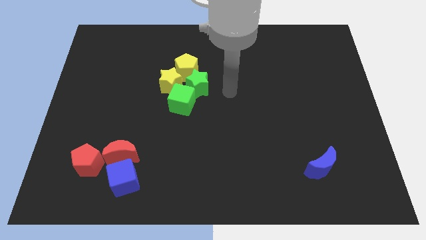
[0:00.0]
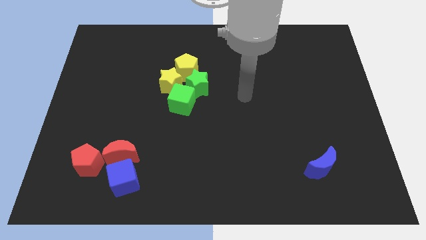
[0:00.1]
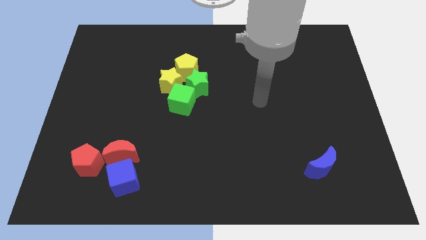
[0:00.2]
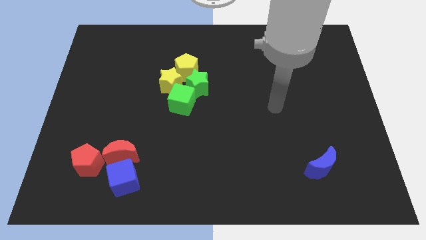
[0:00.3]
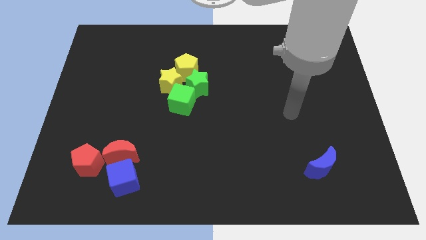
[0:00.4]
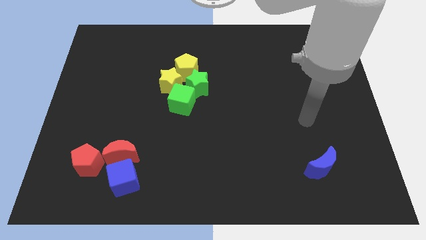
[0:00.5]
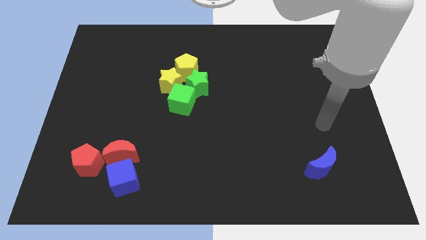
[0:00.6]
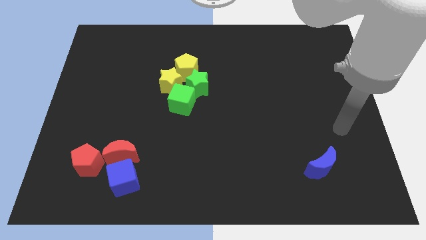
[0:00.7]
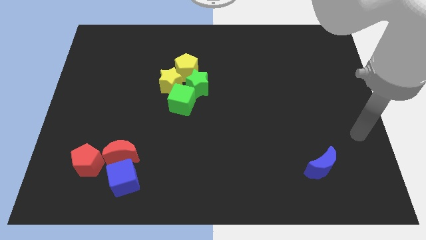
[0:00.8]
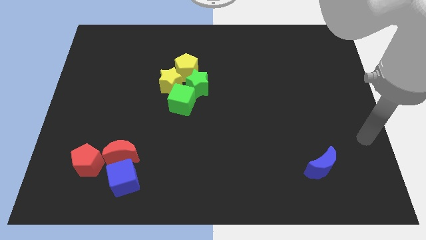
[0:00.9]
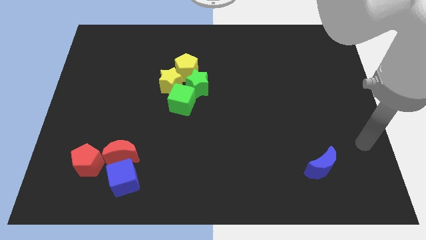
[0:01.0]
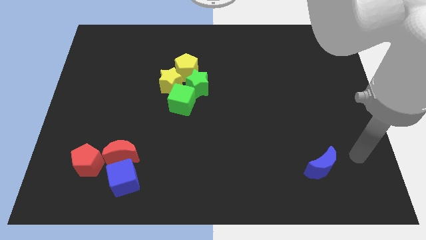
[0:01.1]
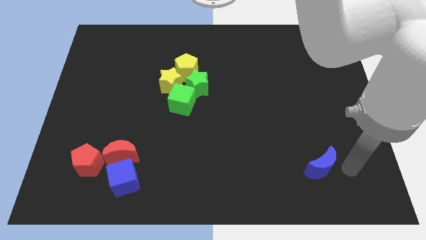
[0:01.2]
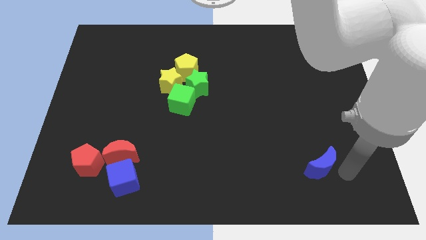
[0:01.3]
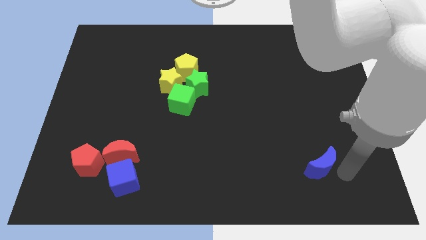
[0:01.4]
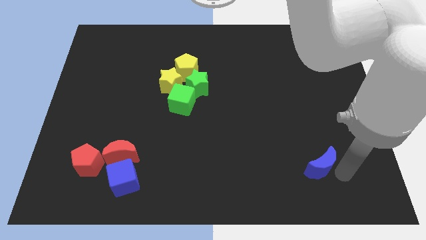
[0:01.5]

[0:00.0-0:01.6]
move your arm to the right of blue moon

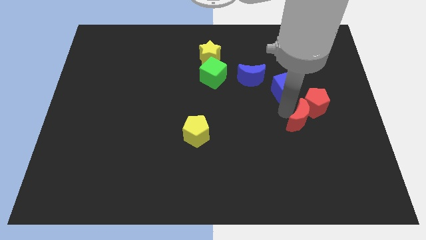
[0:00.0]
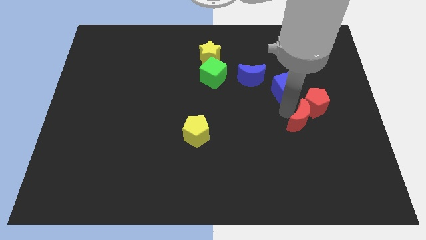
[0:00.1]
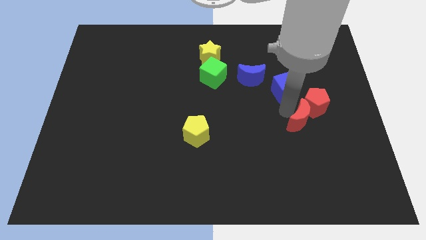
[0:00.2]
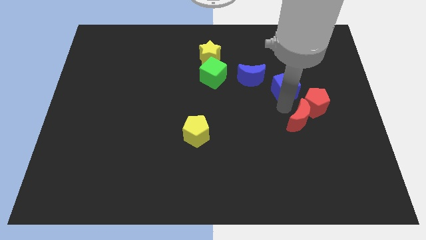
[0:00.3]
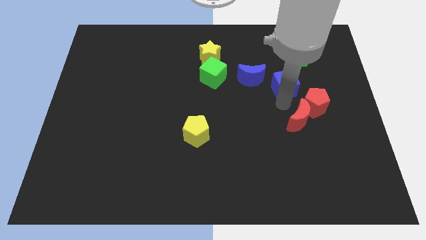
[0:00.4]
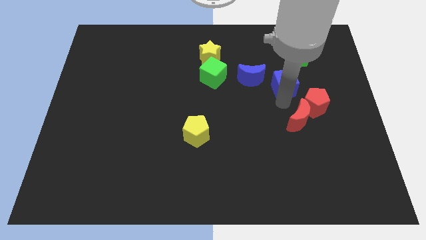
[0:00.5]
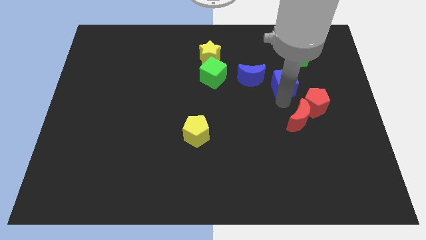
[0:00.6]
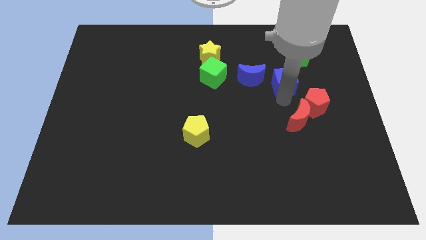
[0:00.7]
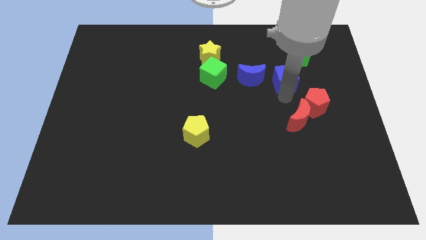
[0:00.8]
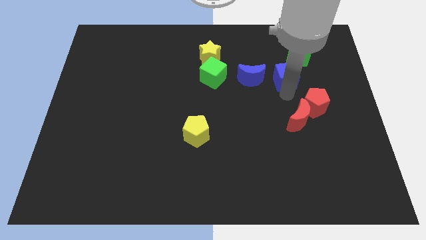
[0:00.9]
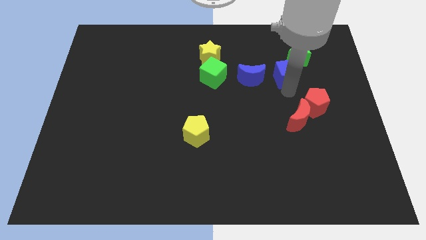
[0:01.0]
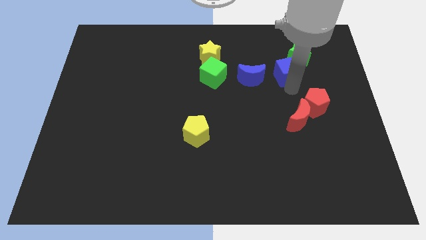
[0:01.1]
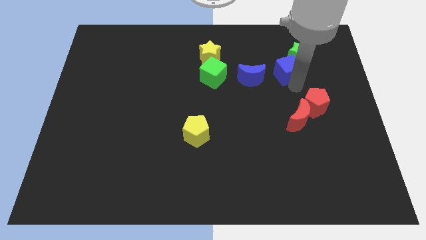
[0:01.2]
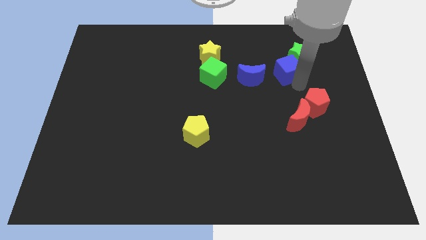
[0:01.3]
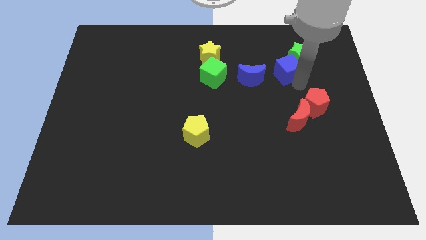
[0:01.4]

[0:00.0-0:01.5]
move blue cube slightly upwards

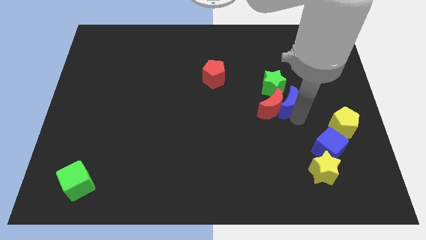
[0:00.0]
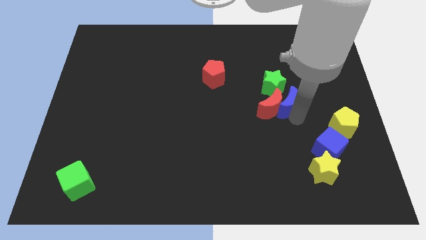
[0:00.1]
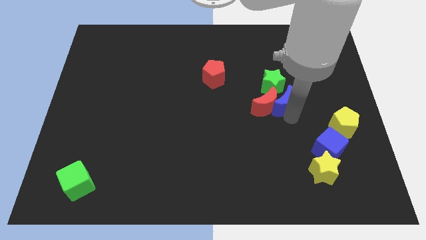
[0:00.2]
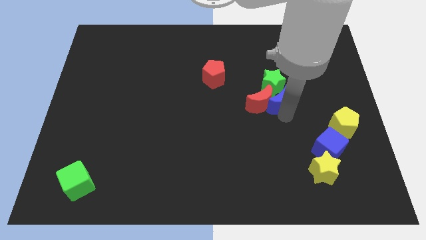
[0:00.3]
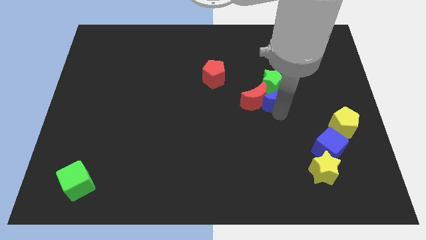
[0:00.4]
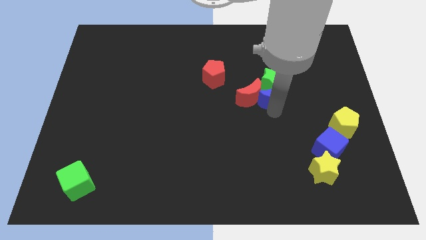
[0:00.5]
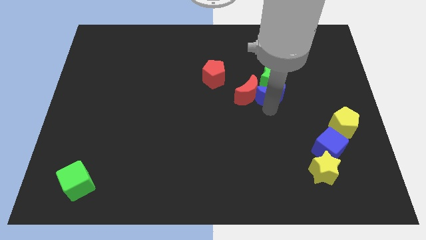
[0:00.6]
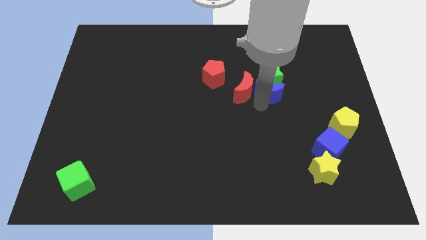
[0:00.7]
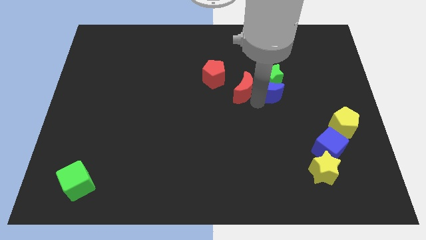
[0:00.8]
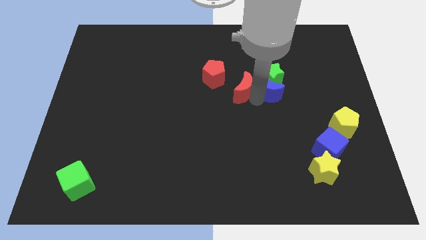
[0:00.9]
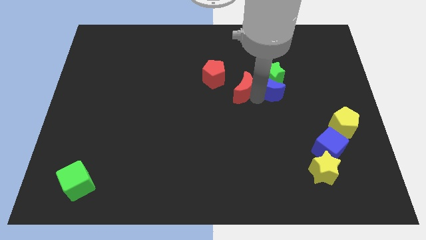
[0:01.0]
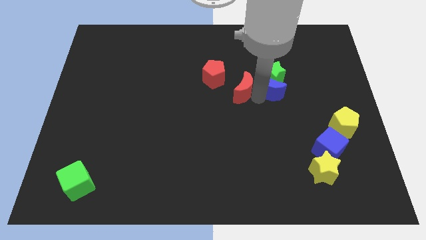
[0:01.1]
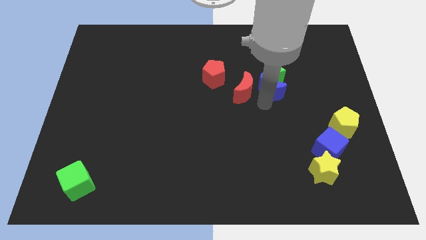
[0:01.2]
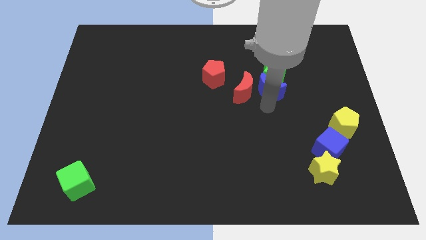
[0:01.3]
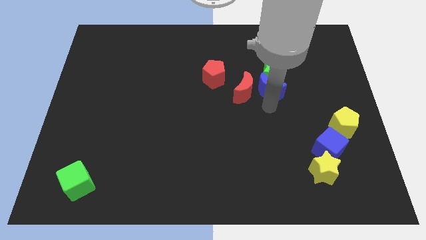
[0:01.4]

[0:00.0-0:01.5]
push the both crescents towards diagonally

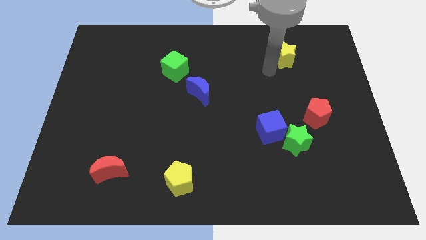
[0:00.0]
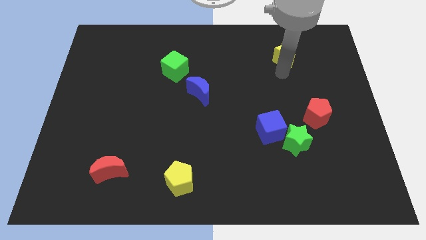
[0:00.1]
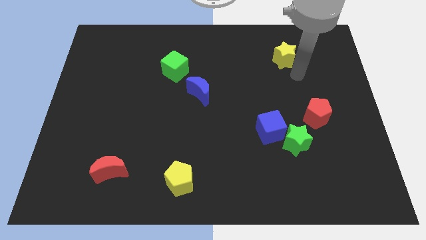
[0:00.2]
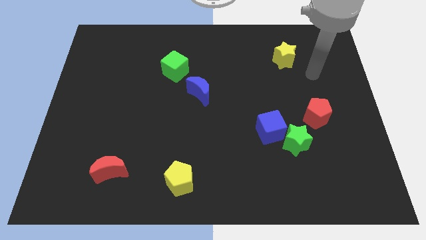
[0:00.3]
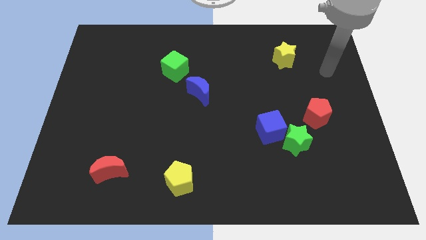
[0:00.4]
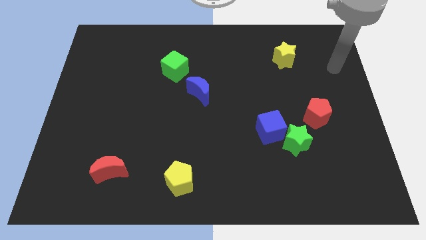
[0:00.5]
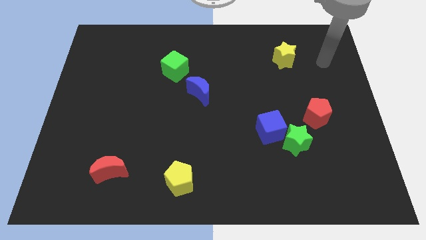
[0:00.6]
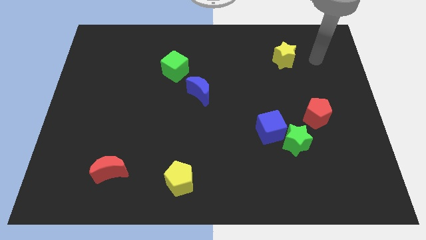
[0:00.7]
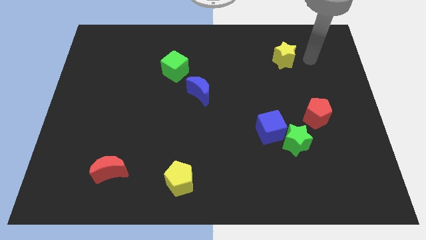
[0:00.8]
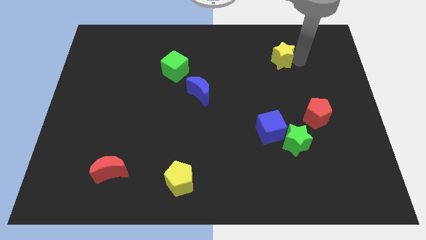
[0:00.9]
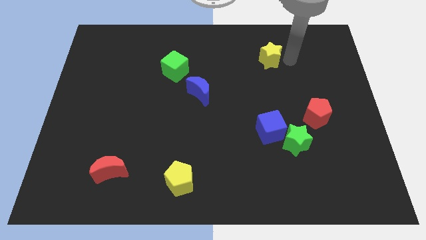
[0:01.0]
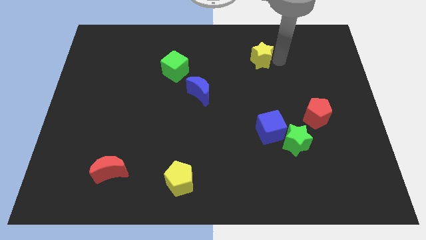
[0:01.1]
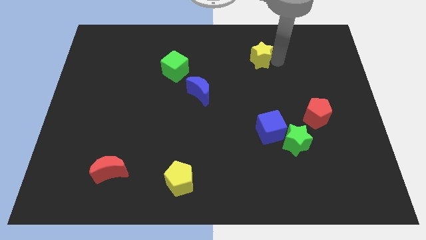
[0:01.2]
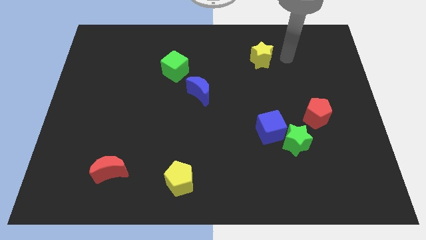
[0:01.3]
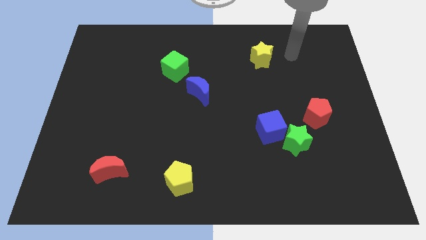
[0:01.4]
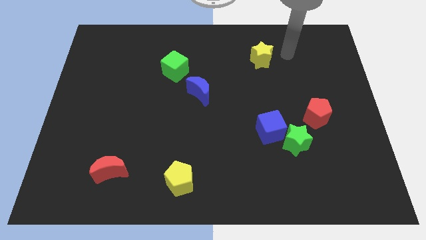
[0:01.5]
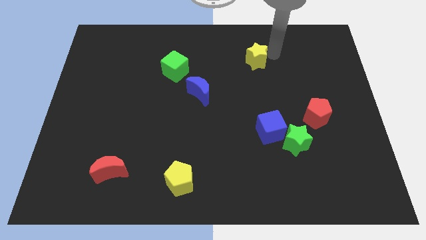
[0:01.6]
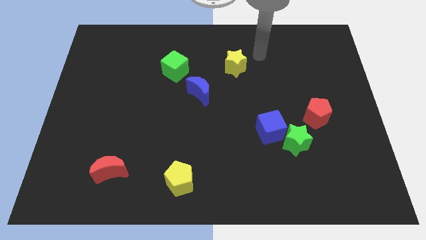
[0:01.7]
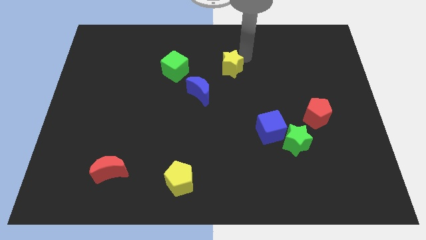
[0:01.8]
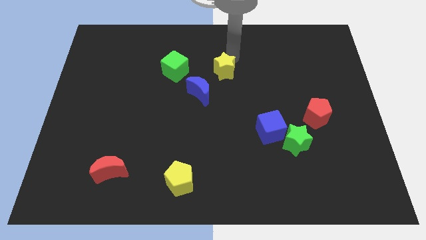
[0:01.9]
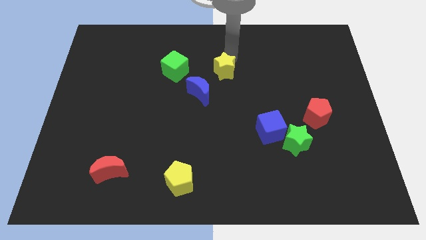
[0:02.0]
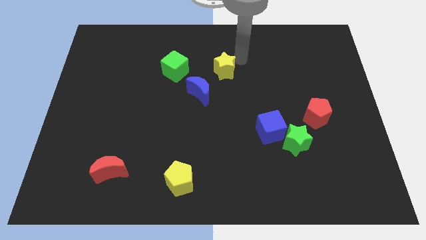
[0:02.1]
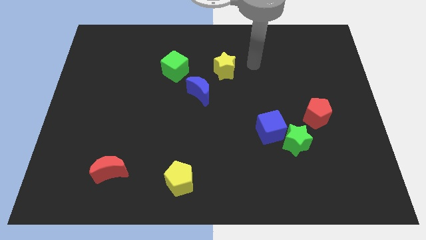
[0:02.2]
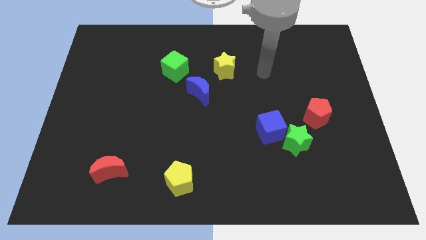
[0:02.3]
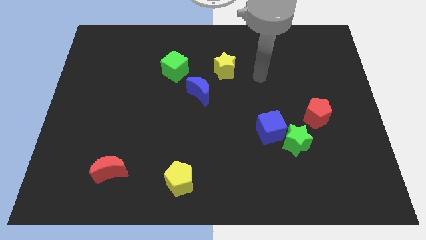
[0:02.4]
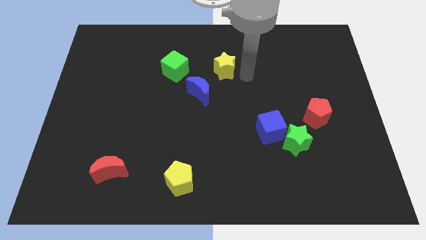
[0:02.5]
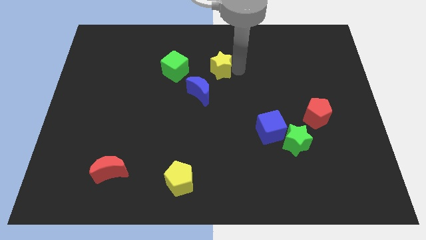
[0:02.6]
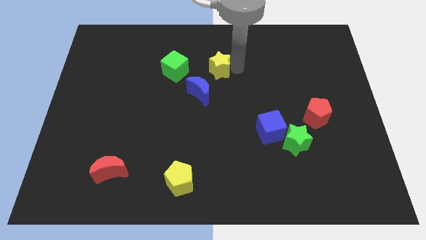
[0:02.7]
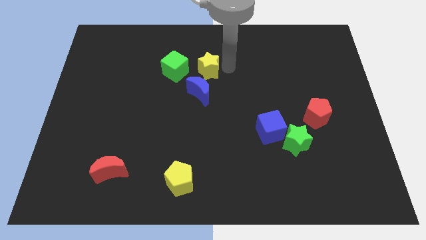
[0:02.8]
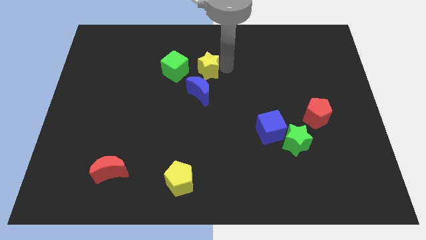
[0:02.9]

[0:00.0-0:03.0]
place the yellow star right to the green cube

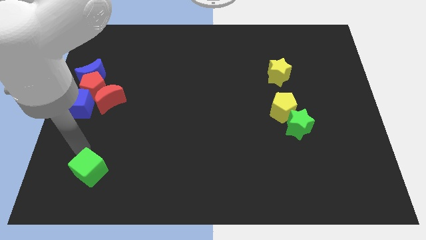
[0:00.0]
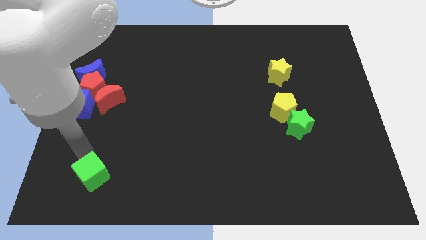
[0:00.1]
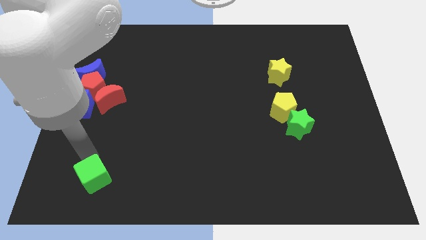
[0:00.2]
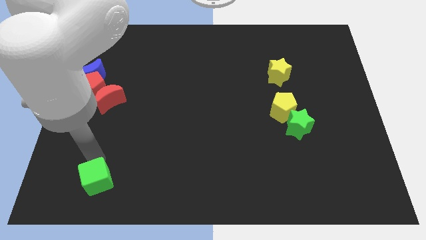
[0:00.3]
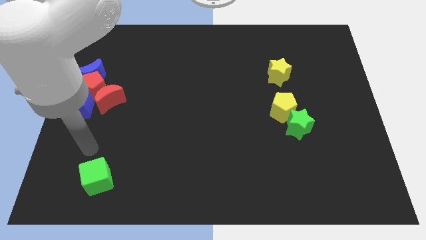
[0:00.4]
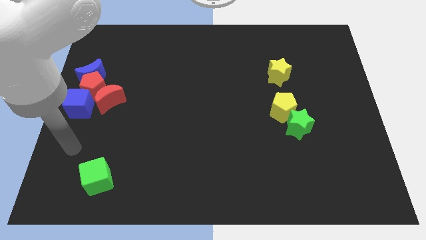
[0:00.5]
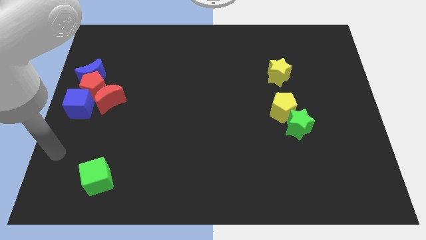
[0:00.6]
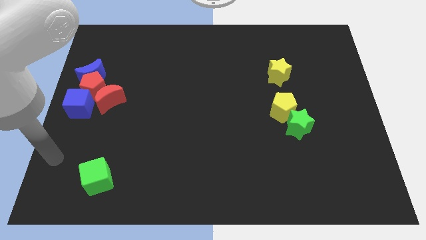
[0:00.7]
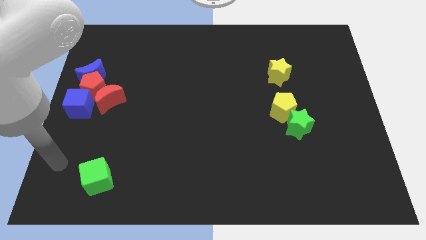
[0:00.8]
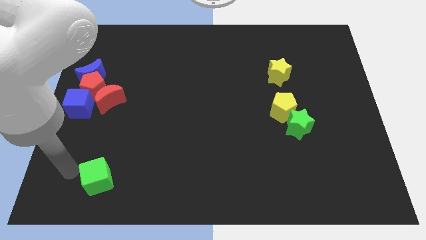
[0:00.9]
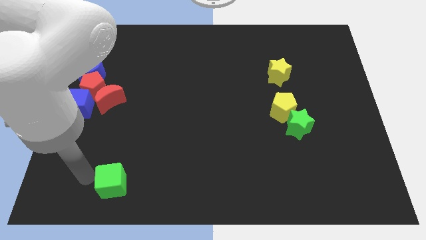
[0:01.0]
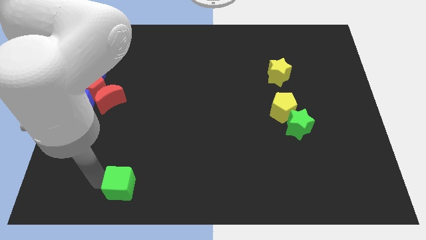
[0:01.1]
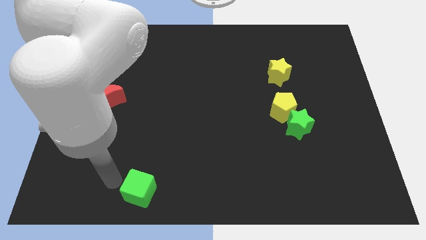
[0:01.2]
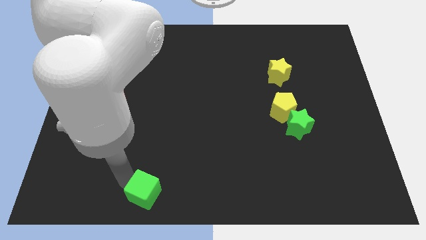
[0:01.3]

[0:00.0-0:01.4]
move green cube to the bottom center
